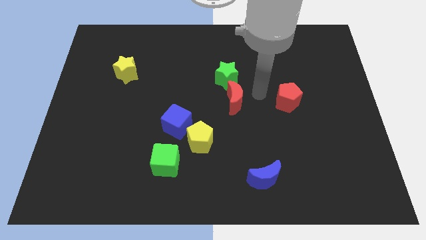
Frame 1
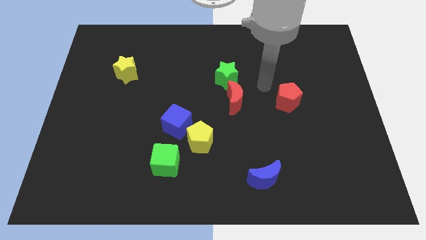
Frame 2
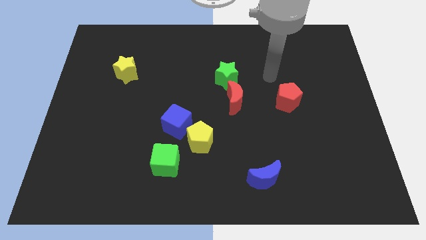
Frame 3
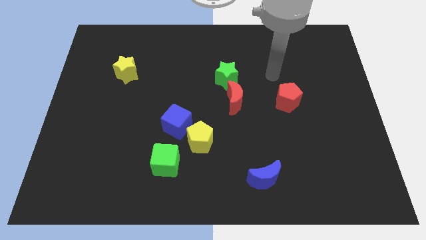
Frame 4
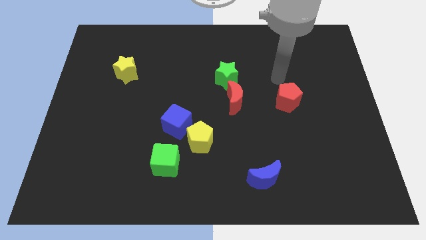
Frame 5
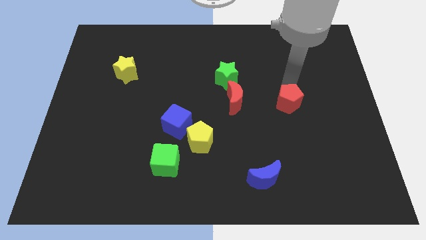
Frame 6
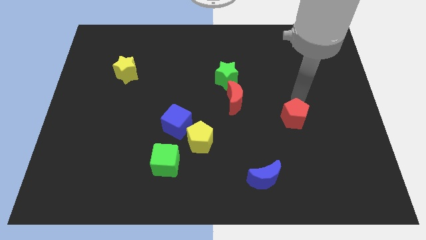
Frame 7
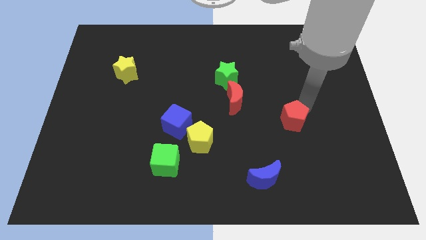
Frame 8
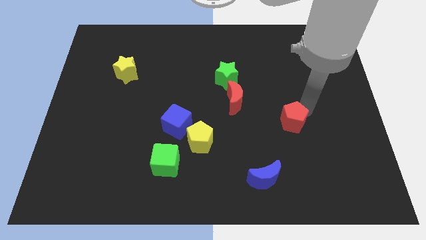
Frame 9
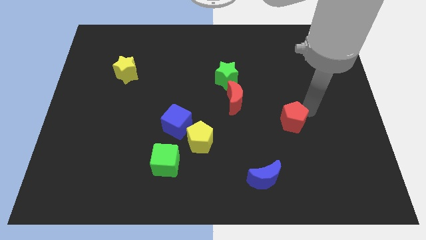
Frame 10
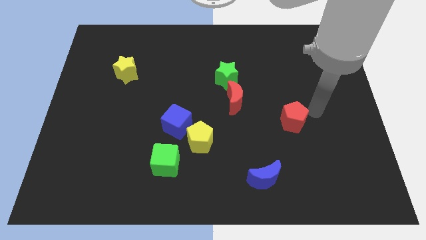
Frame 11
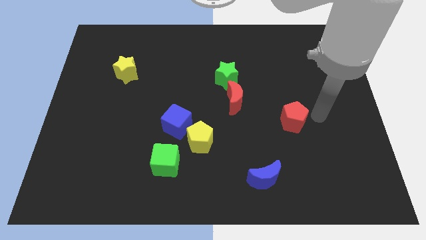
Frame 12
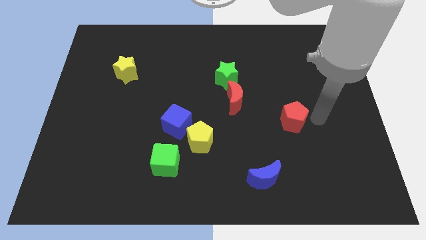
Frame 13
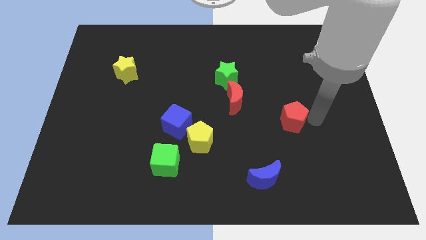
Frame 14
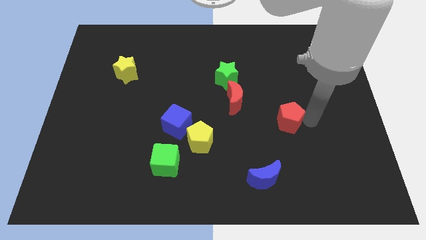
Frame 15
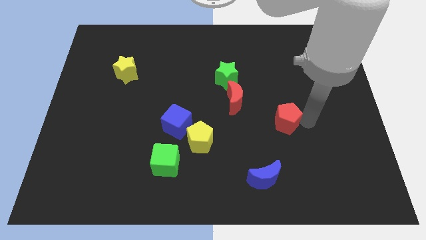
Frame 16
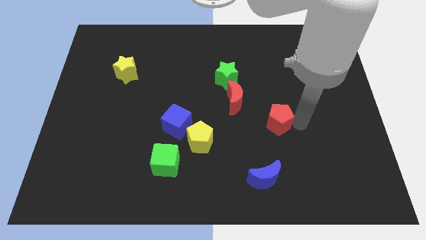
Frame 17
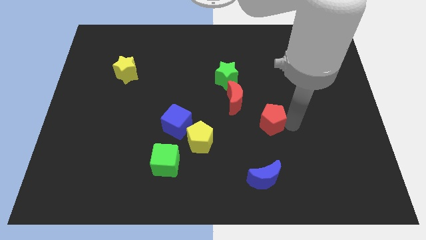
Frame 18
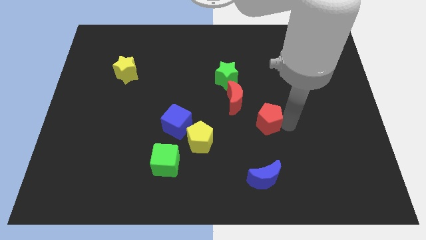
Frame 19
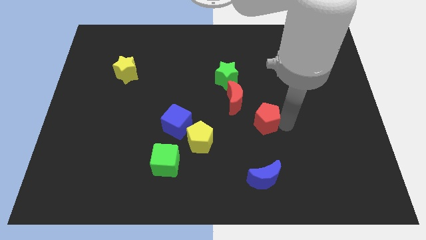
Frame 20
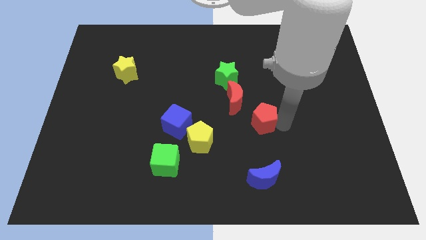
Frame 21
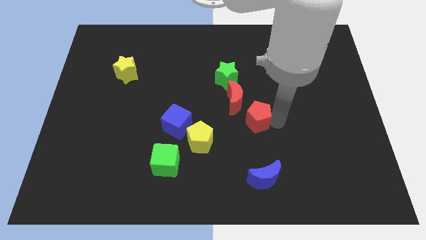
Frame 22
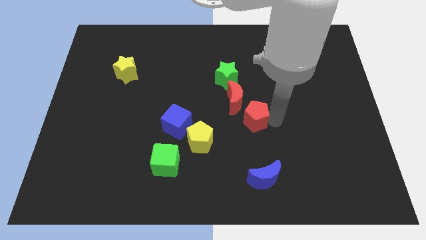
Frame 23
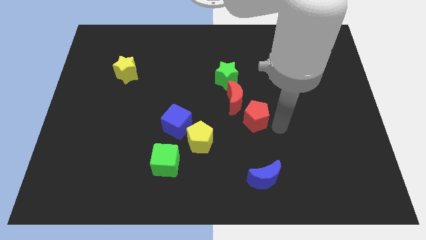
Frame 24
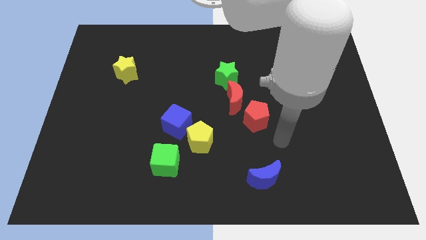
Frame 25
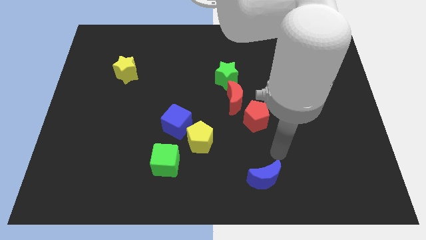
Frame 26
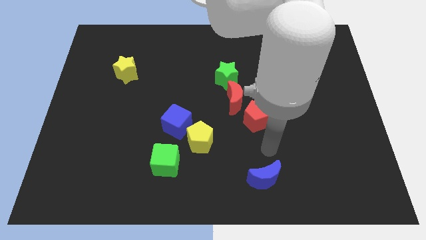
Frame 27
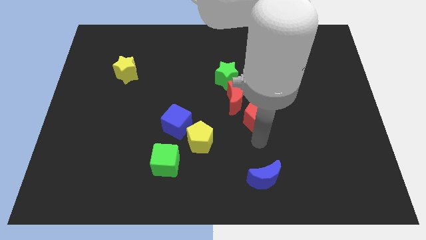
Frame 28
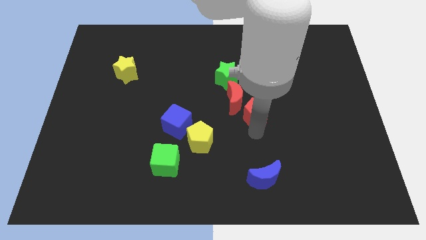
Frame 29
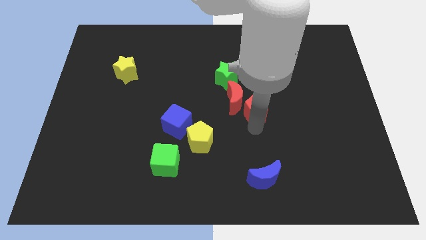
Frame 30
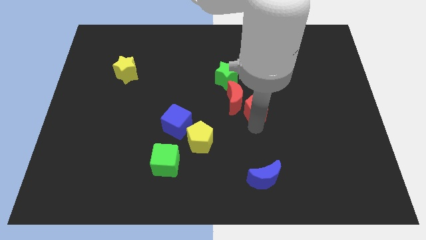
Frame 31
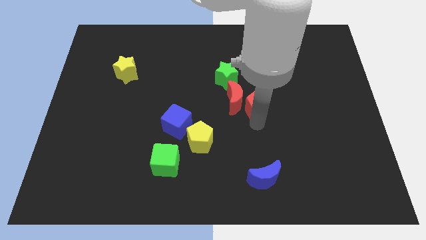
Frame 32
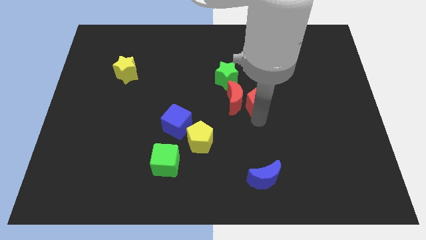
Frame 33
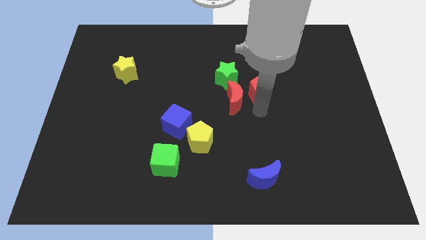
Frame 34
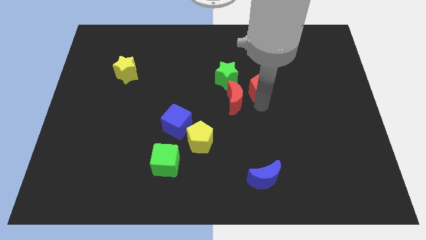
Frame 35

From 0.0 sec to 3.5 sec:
push red pentagon beside red crescent

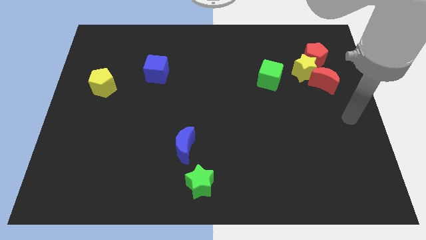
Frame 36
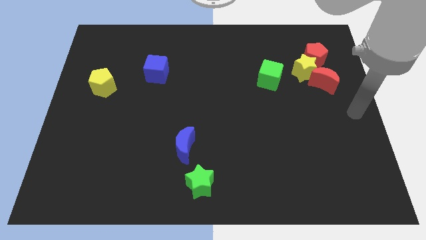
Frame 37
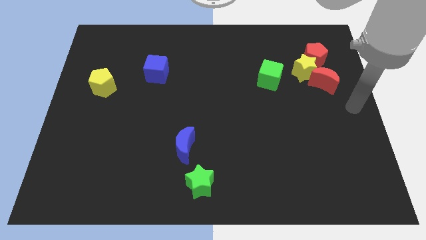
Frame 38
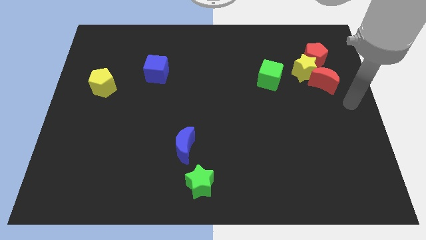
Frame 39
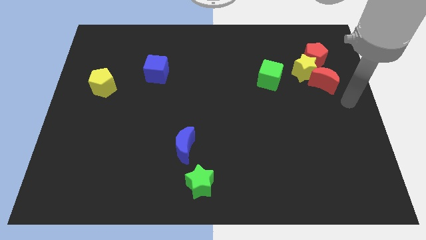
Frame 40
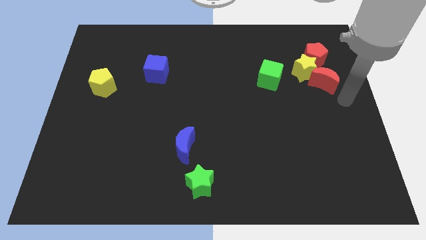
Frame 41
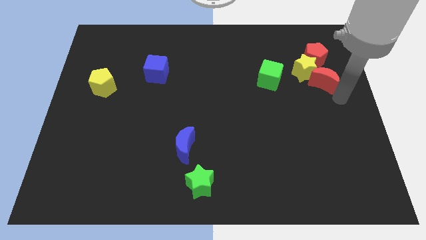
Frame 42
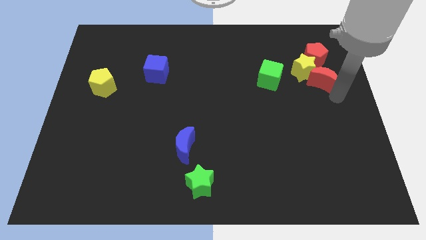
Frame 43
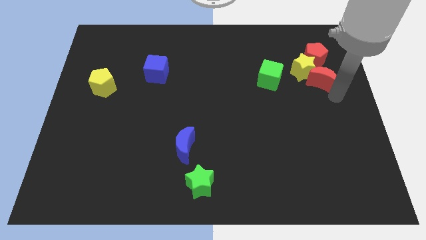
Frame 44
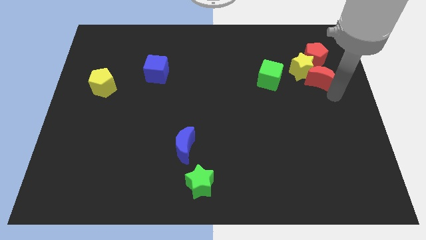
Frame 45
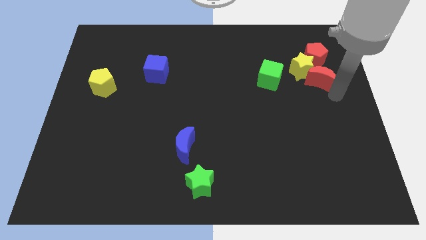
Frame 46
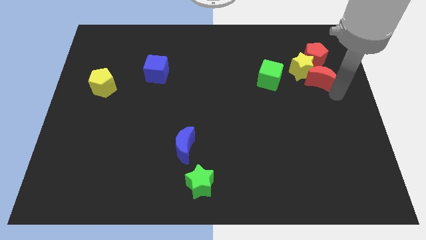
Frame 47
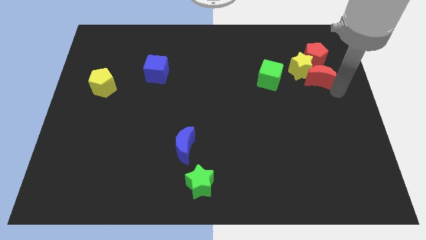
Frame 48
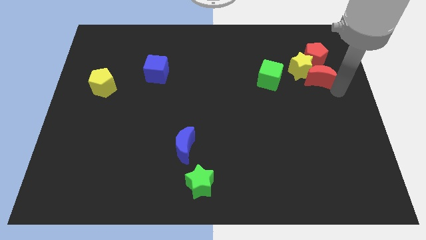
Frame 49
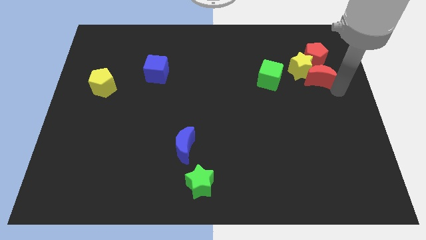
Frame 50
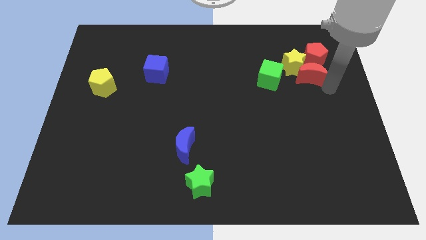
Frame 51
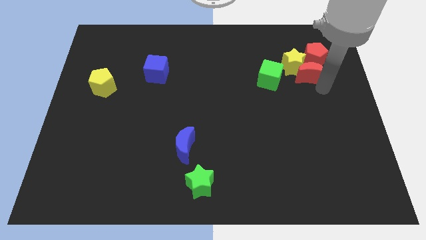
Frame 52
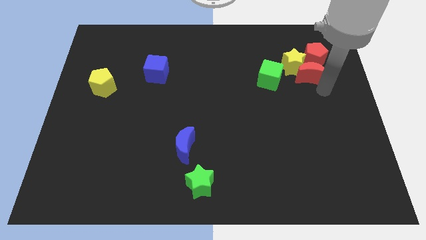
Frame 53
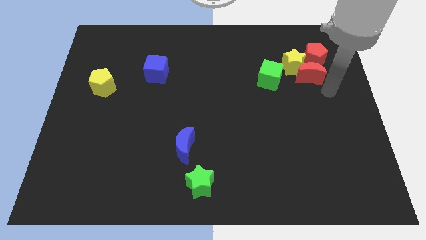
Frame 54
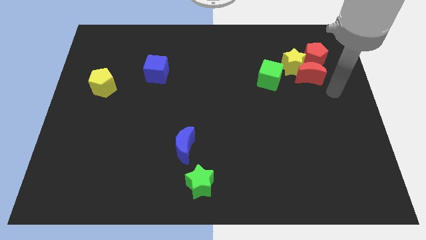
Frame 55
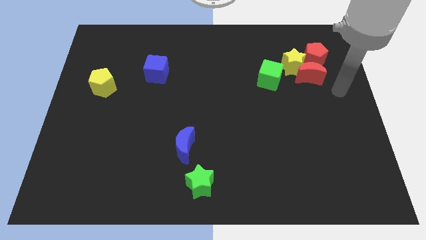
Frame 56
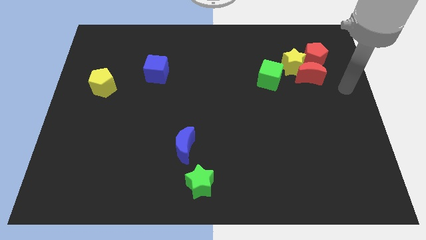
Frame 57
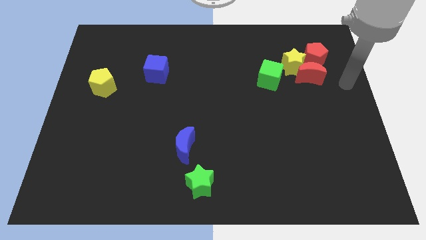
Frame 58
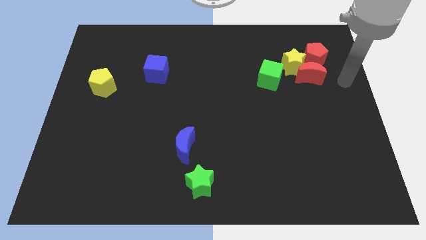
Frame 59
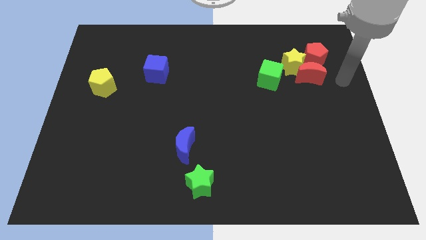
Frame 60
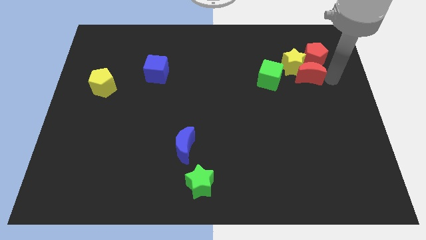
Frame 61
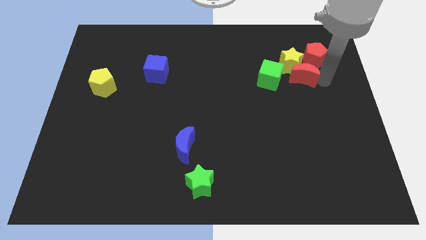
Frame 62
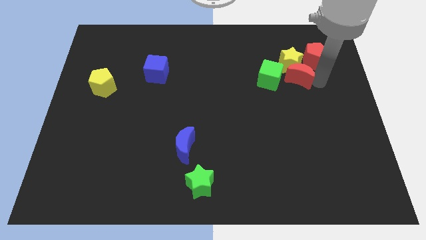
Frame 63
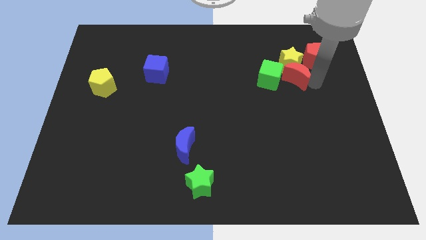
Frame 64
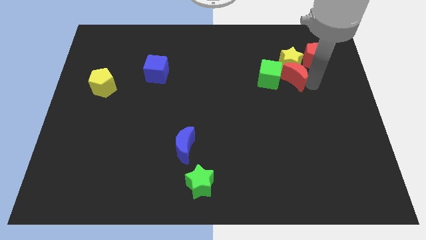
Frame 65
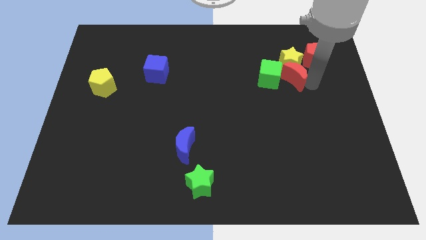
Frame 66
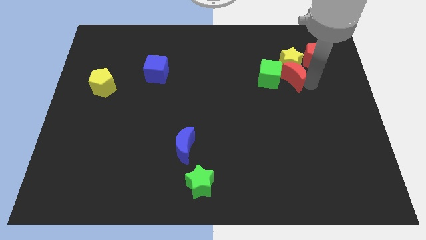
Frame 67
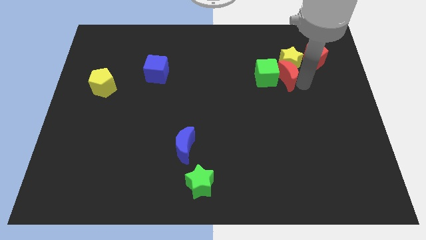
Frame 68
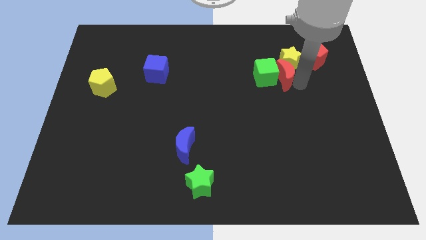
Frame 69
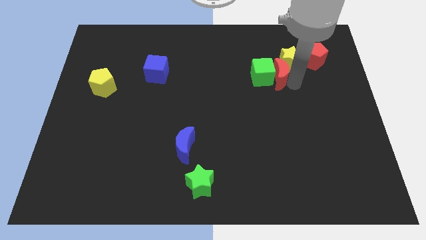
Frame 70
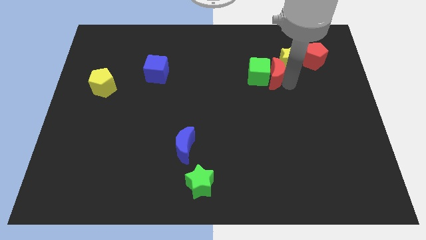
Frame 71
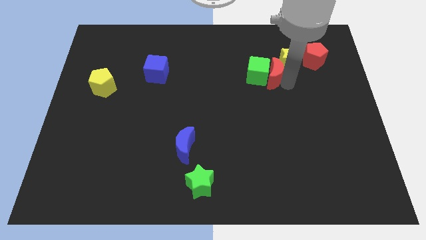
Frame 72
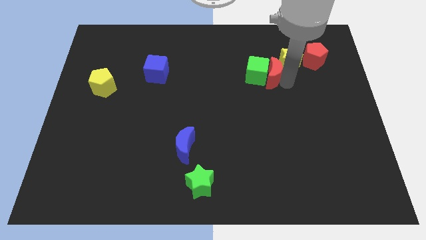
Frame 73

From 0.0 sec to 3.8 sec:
push the red moon into the group of blocks

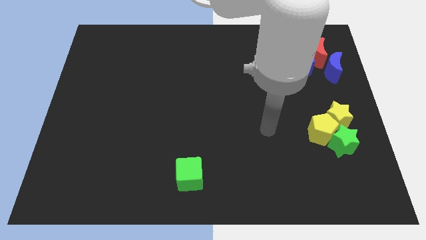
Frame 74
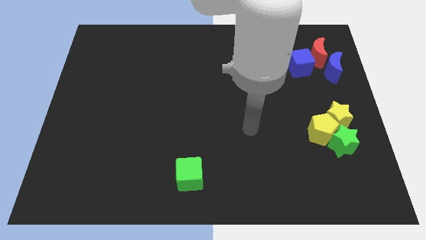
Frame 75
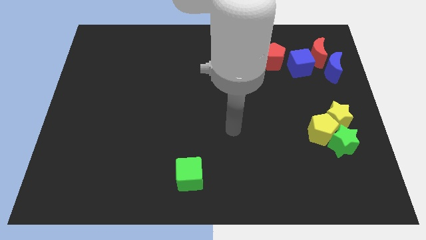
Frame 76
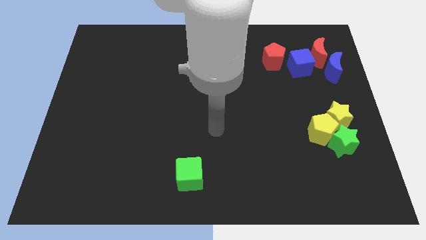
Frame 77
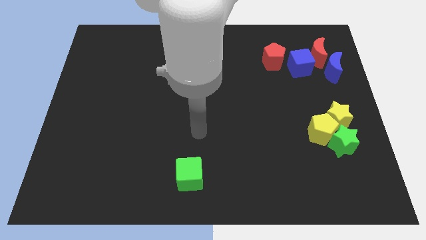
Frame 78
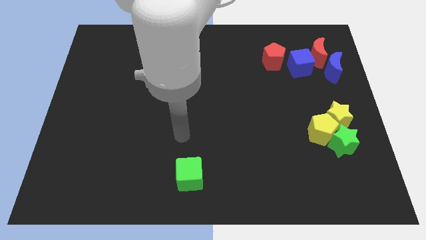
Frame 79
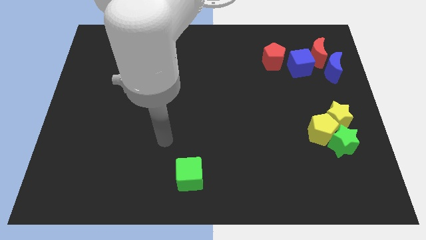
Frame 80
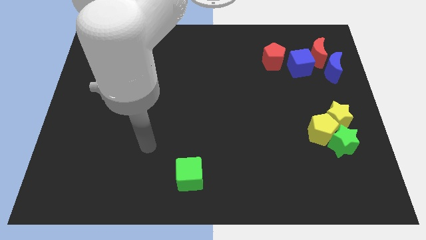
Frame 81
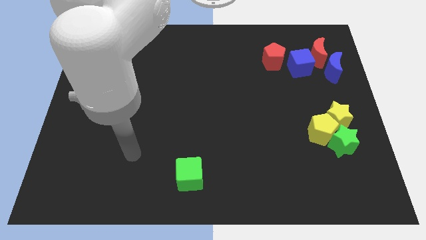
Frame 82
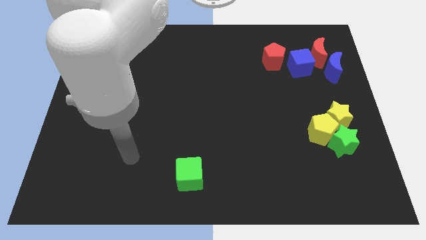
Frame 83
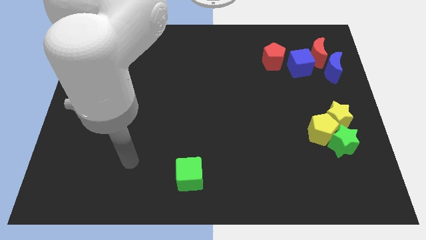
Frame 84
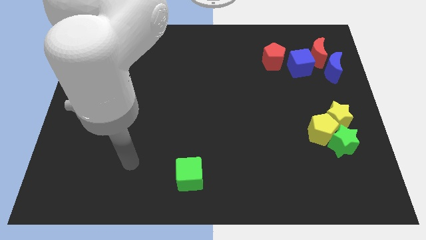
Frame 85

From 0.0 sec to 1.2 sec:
move your arm towards bottom center

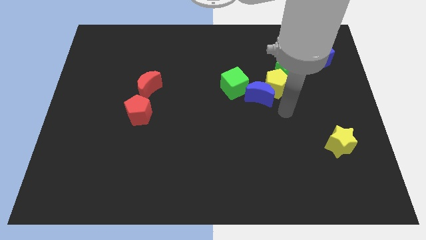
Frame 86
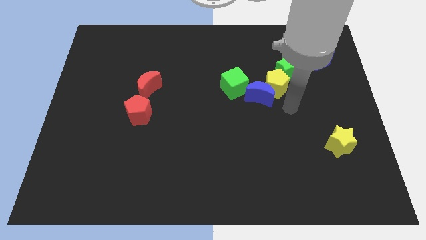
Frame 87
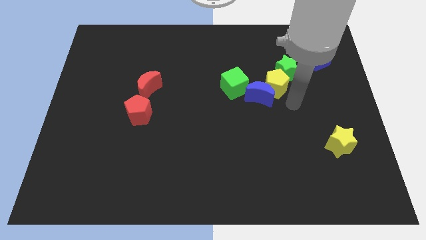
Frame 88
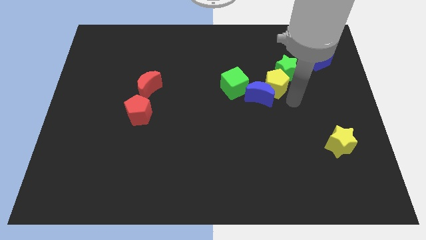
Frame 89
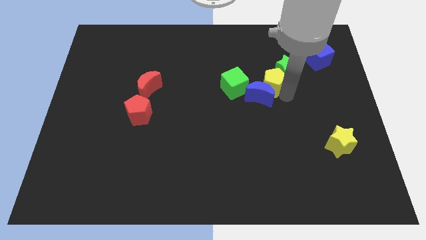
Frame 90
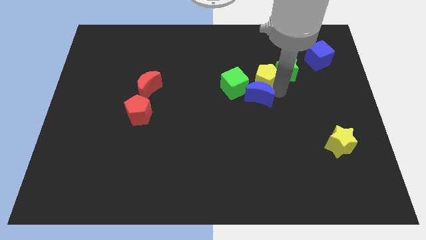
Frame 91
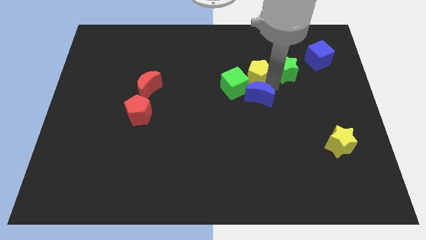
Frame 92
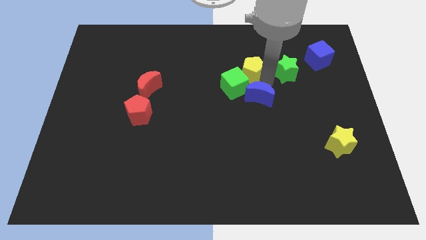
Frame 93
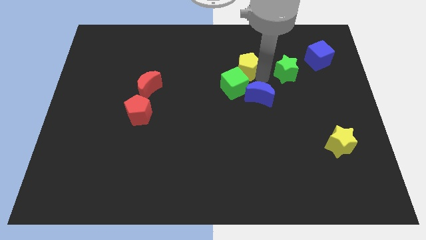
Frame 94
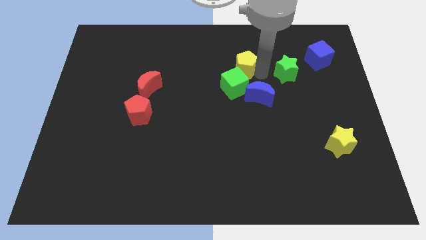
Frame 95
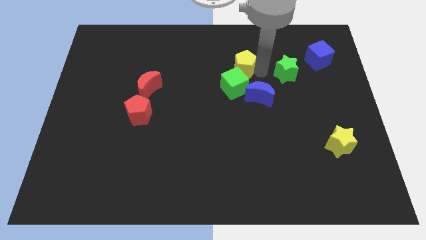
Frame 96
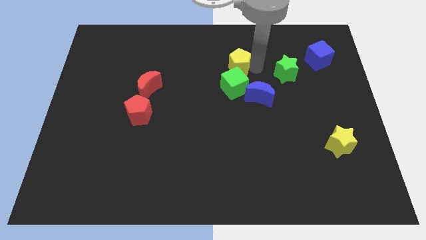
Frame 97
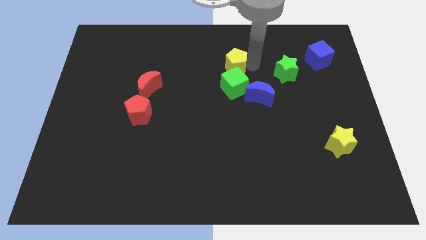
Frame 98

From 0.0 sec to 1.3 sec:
push the yellow pentagon to the top side of the green cube
